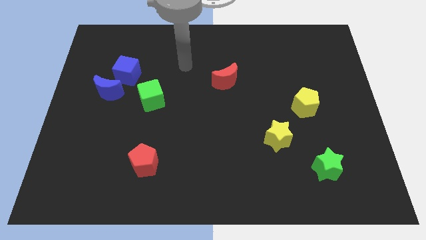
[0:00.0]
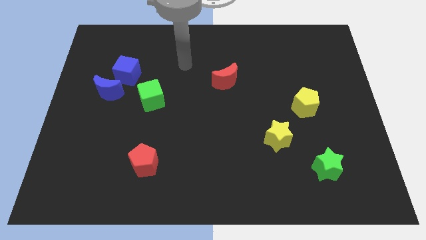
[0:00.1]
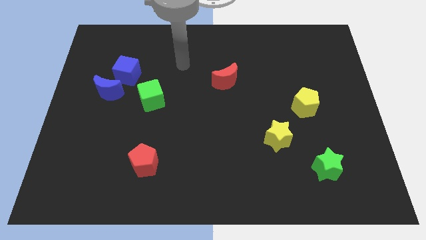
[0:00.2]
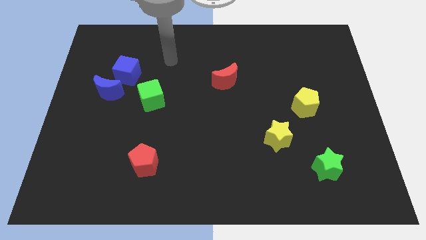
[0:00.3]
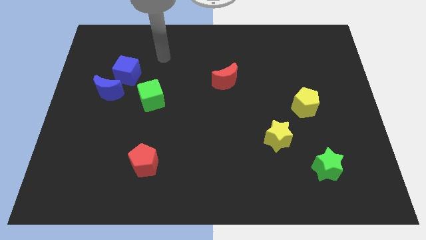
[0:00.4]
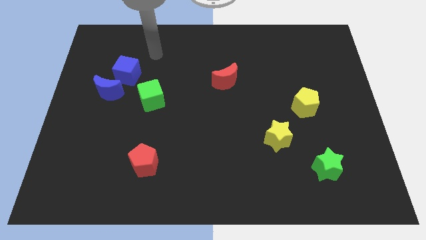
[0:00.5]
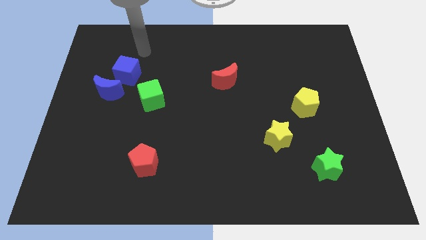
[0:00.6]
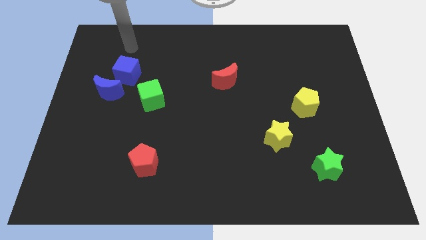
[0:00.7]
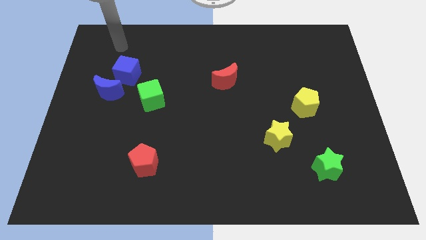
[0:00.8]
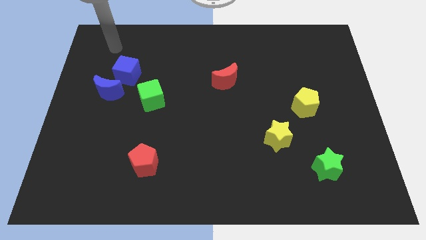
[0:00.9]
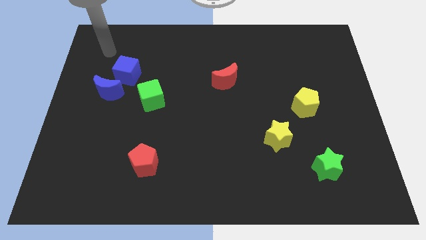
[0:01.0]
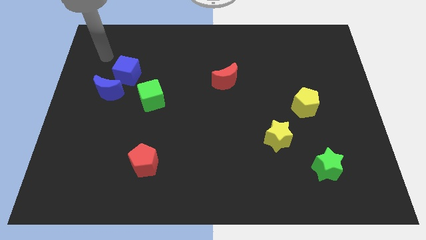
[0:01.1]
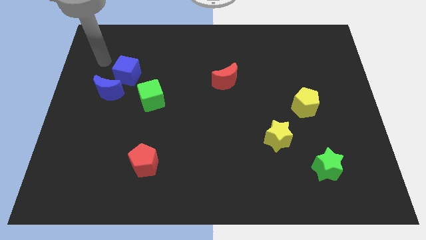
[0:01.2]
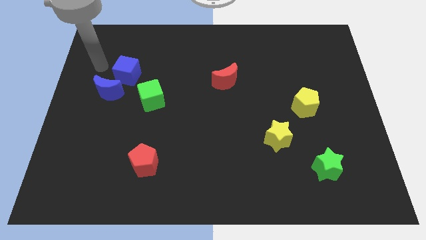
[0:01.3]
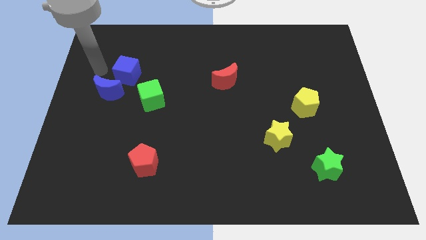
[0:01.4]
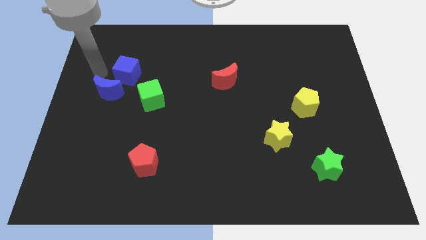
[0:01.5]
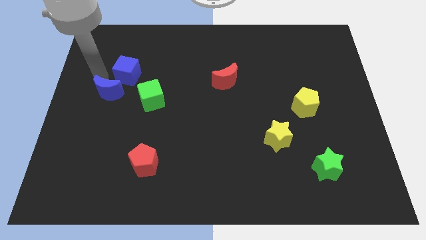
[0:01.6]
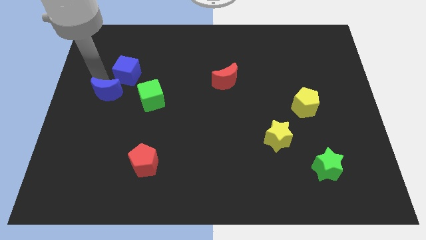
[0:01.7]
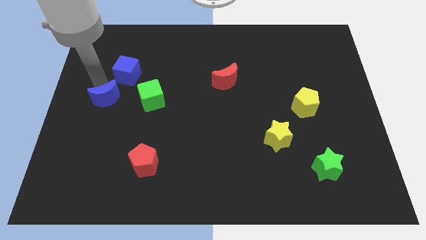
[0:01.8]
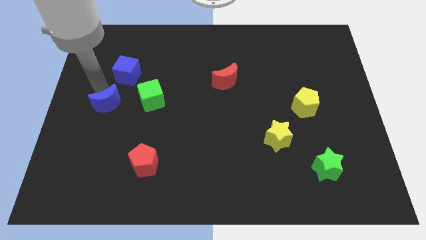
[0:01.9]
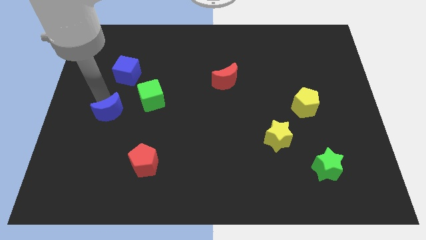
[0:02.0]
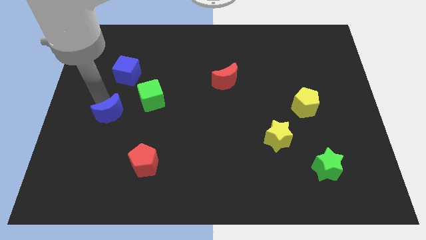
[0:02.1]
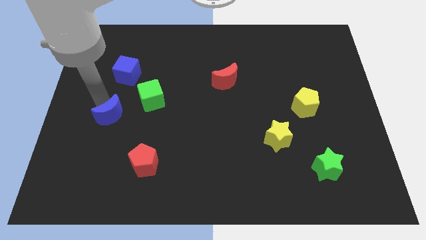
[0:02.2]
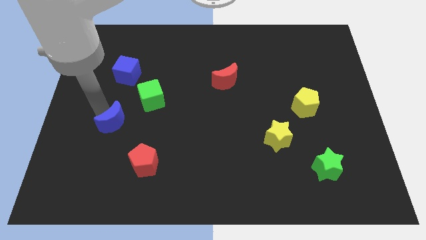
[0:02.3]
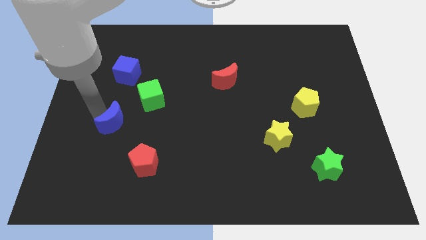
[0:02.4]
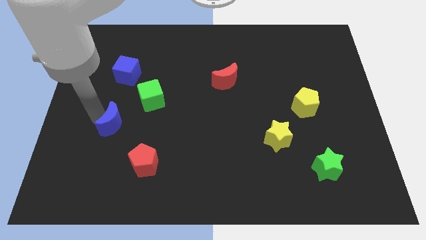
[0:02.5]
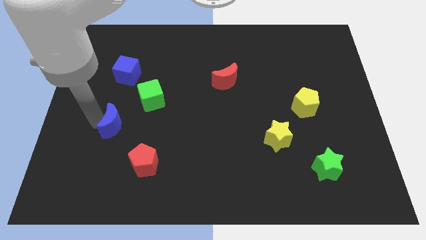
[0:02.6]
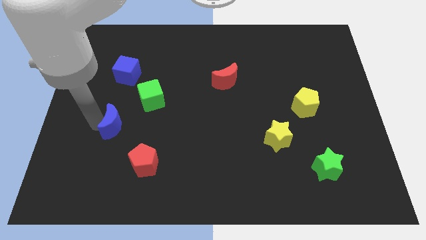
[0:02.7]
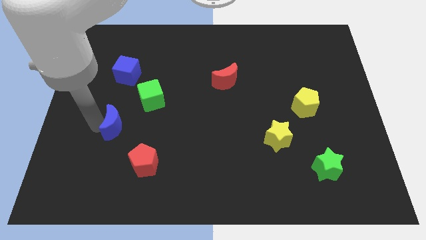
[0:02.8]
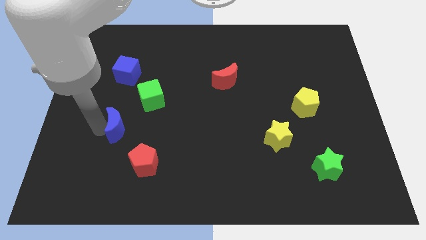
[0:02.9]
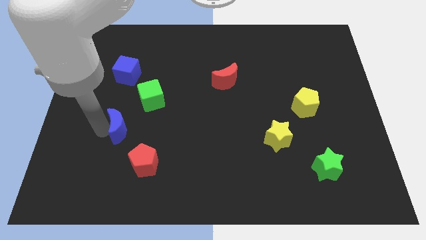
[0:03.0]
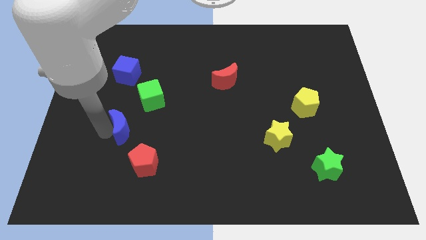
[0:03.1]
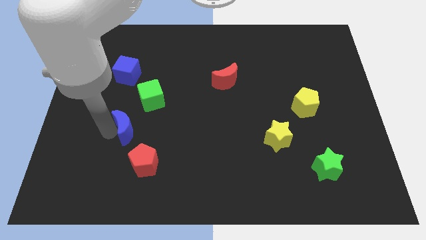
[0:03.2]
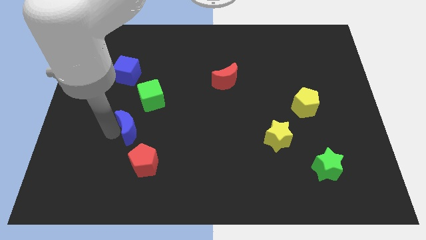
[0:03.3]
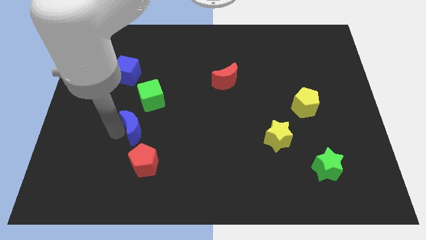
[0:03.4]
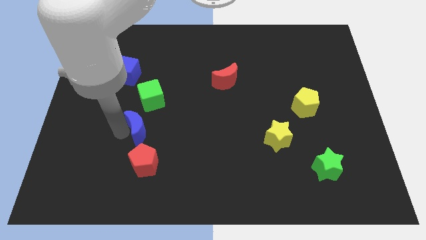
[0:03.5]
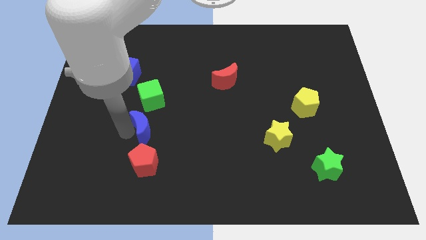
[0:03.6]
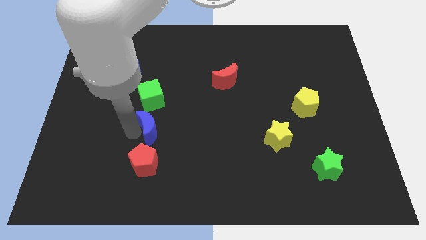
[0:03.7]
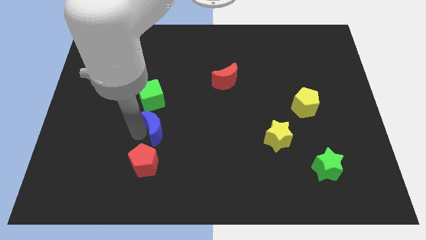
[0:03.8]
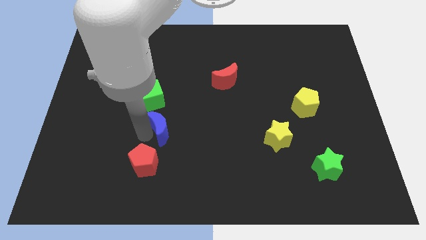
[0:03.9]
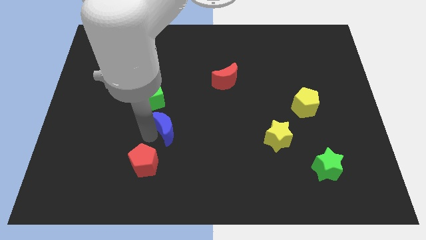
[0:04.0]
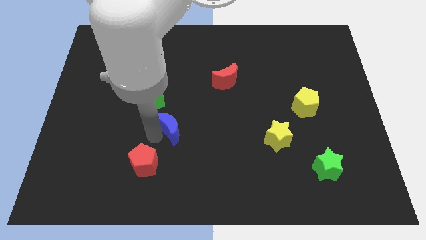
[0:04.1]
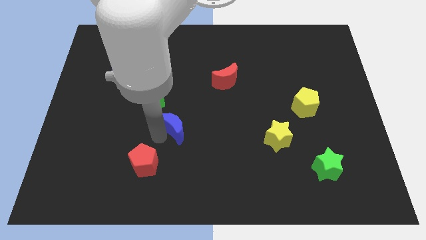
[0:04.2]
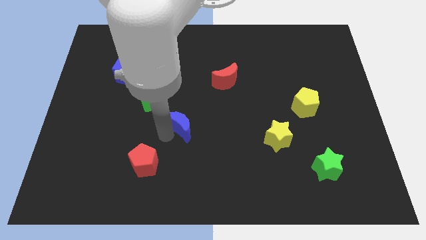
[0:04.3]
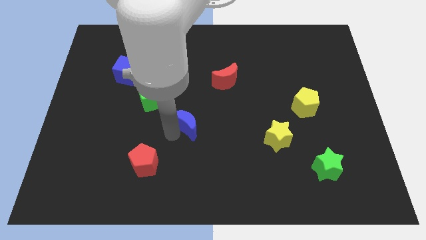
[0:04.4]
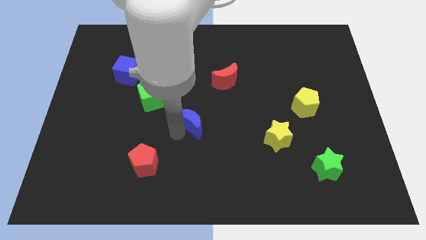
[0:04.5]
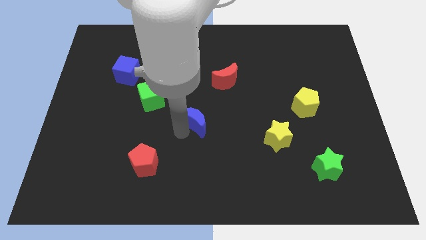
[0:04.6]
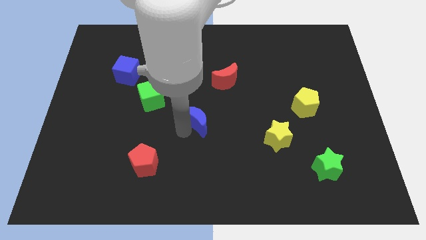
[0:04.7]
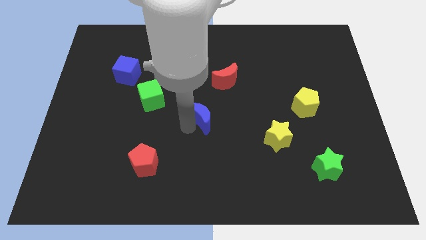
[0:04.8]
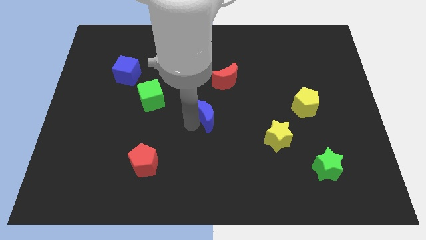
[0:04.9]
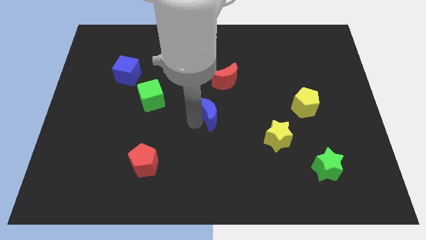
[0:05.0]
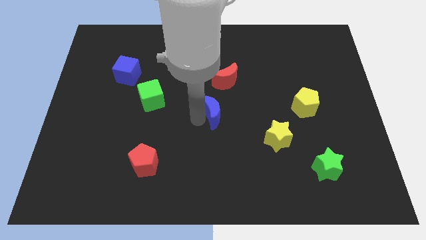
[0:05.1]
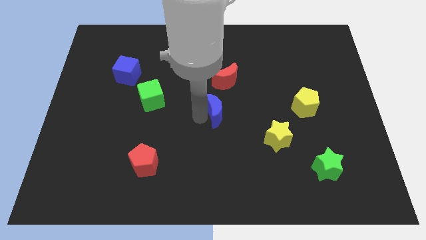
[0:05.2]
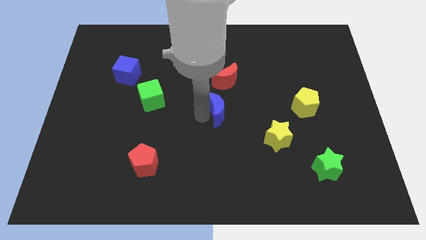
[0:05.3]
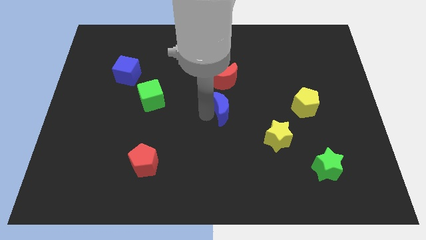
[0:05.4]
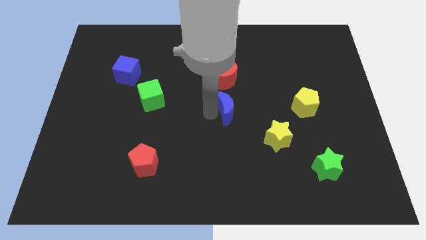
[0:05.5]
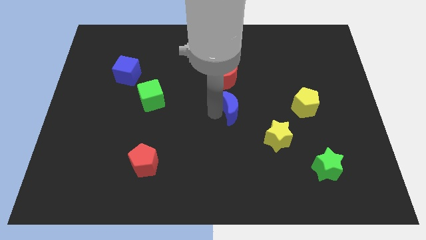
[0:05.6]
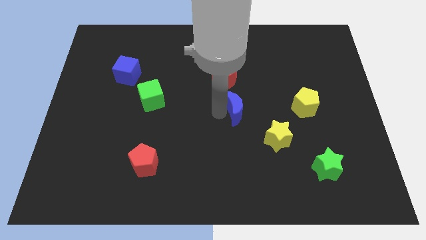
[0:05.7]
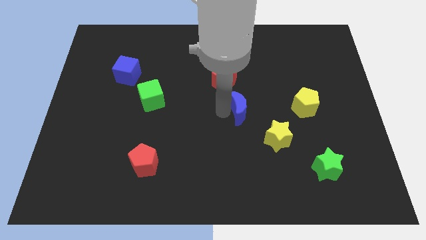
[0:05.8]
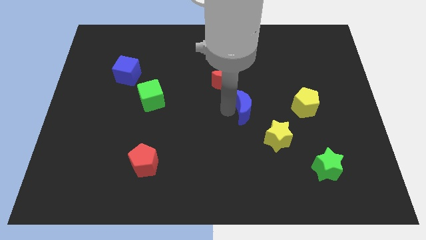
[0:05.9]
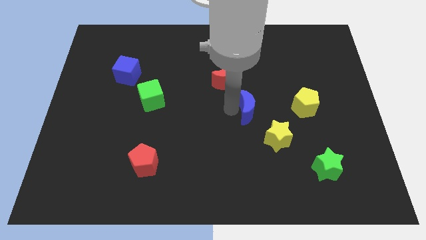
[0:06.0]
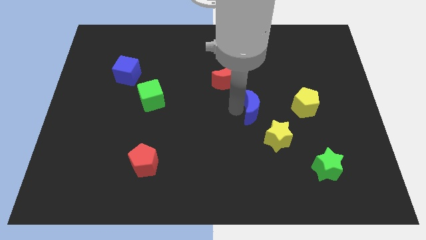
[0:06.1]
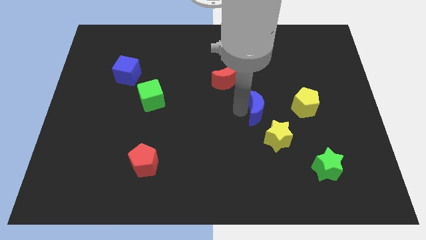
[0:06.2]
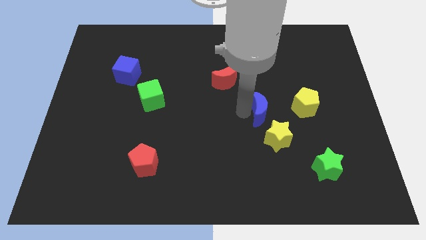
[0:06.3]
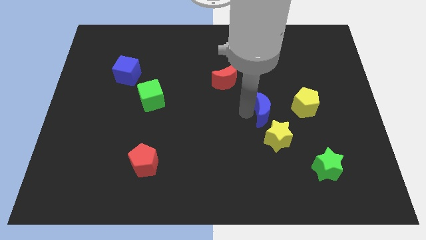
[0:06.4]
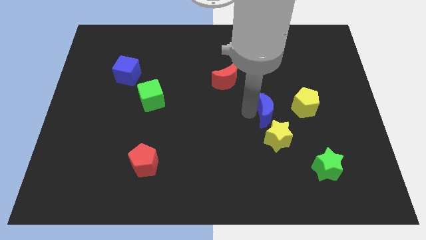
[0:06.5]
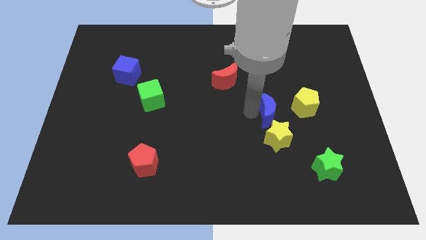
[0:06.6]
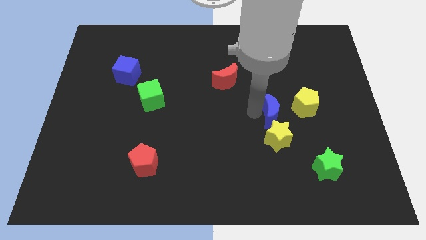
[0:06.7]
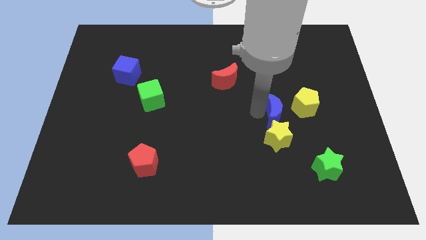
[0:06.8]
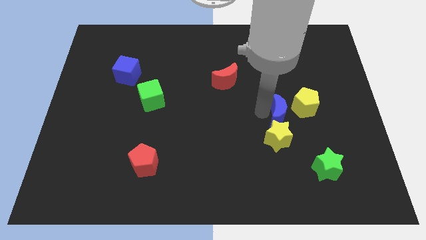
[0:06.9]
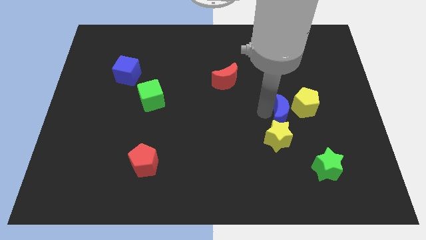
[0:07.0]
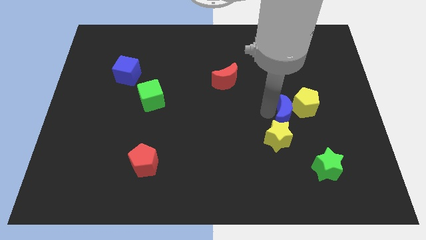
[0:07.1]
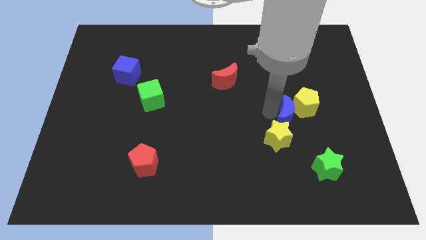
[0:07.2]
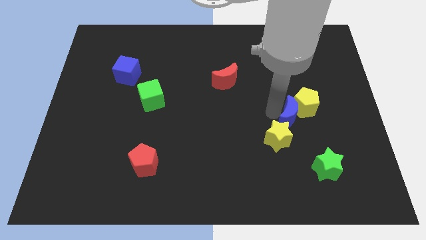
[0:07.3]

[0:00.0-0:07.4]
slide the blue moon next to the yellow pentagon

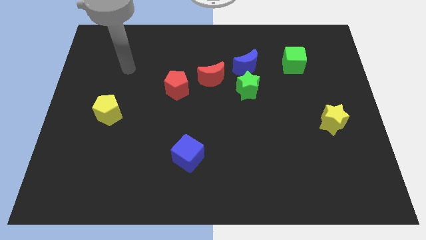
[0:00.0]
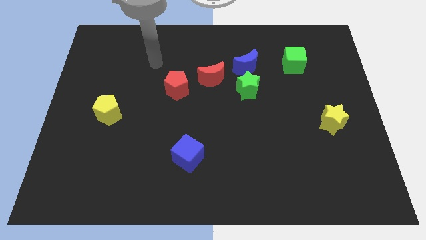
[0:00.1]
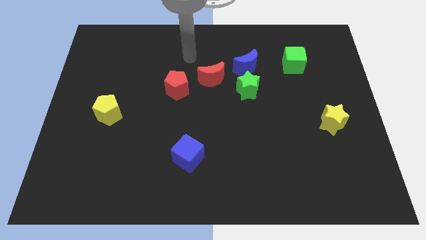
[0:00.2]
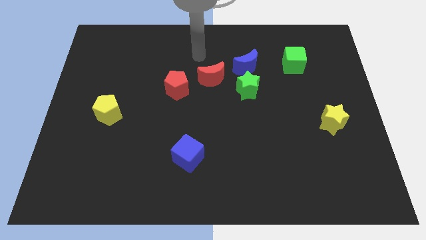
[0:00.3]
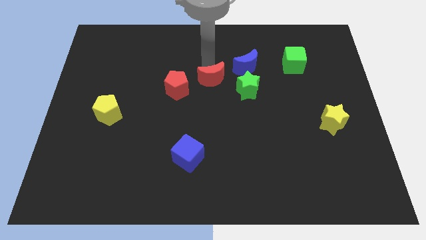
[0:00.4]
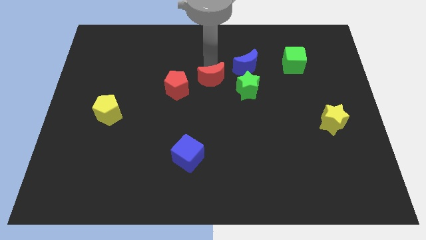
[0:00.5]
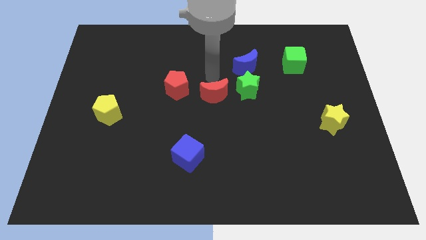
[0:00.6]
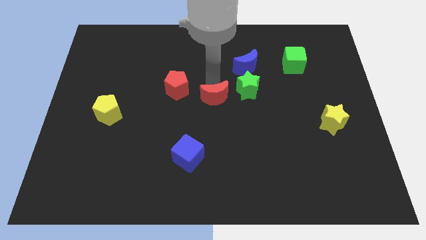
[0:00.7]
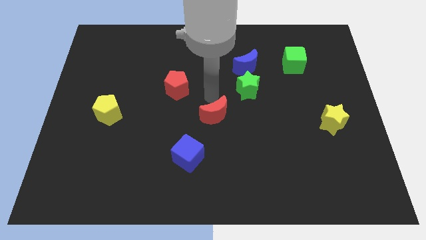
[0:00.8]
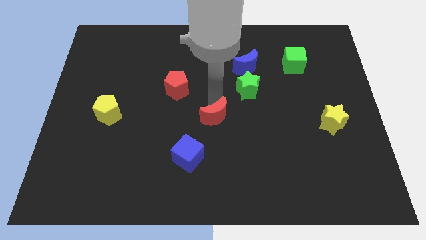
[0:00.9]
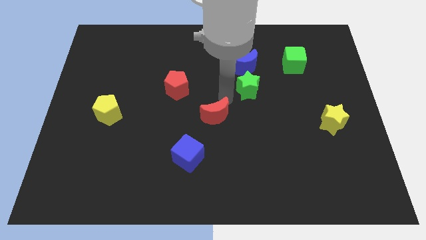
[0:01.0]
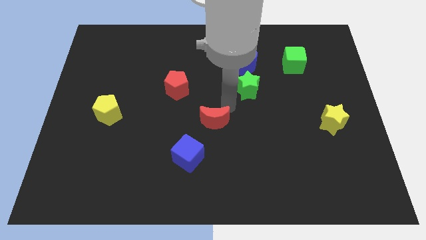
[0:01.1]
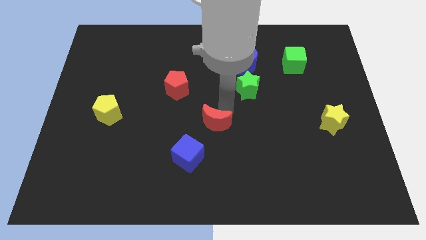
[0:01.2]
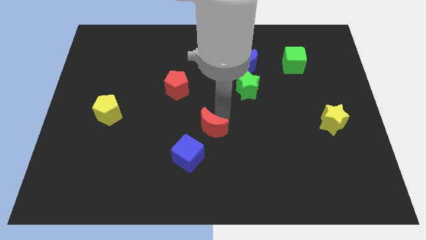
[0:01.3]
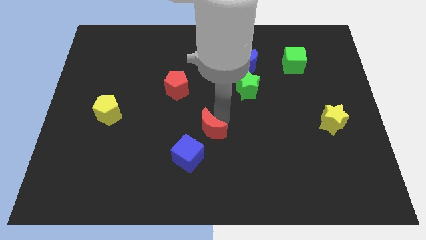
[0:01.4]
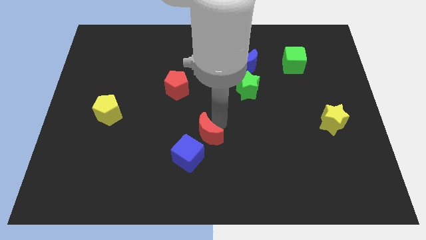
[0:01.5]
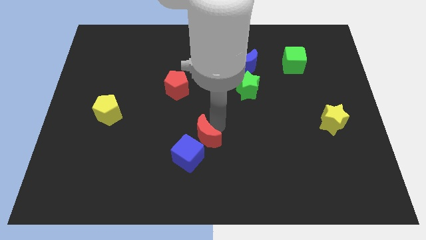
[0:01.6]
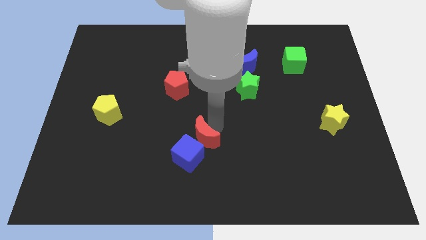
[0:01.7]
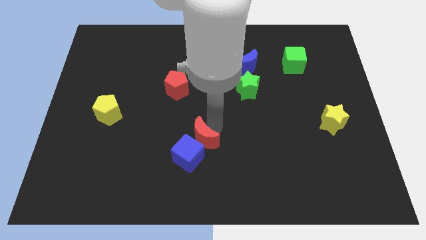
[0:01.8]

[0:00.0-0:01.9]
slide the red moon towards the blue cube
